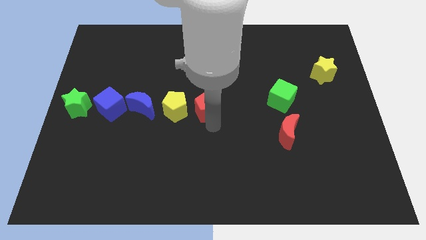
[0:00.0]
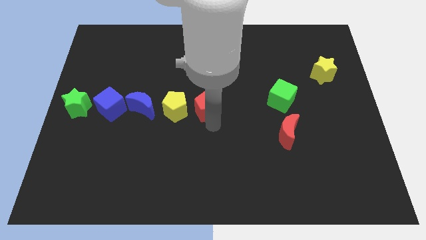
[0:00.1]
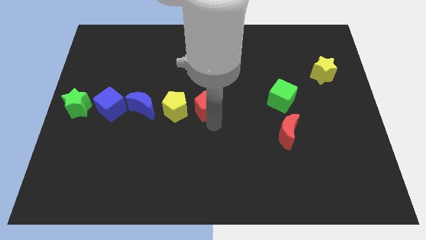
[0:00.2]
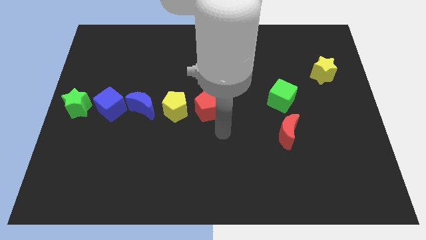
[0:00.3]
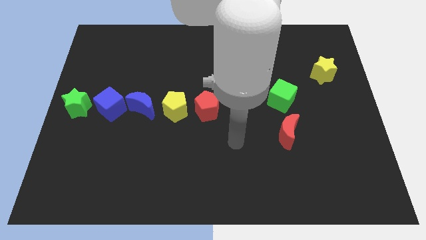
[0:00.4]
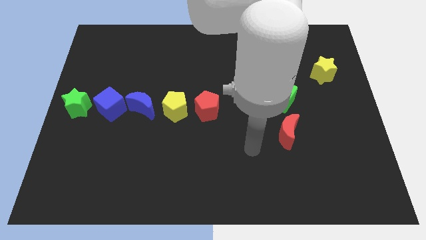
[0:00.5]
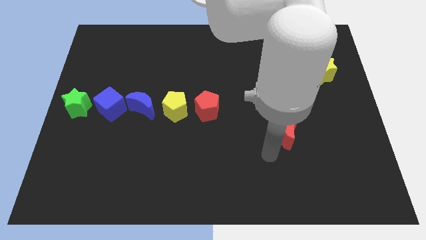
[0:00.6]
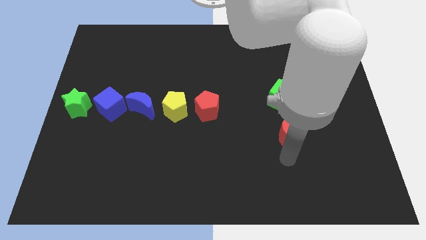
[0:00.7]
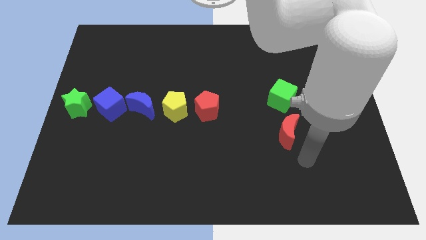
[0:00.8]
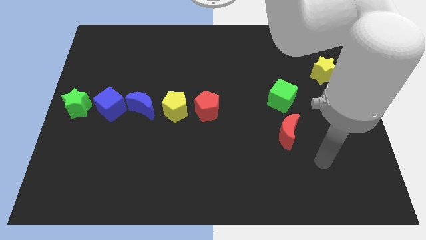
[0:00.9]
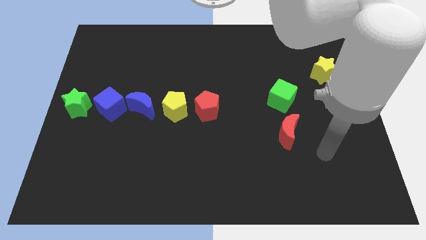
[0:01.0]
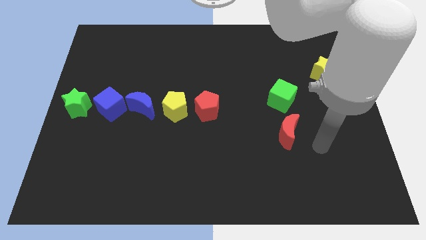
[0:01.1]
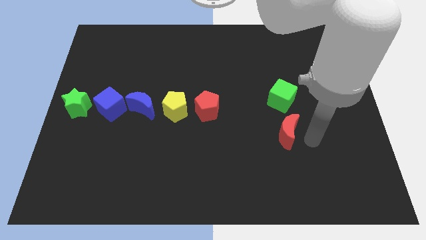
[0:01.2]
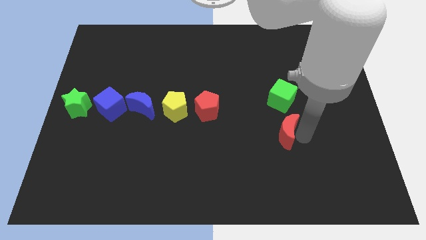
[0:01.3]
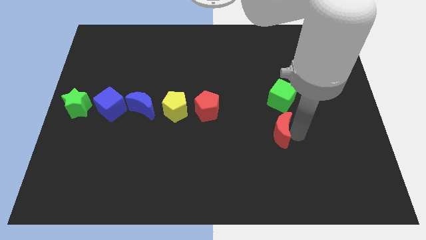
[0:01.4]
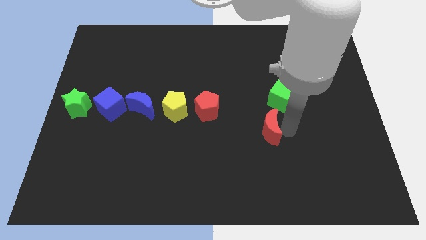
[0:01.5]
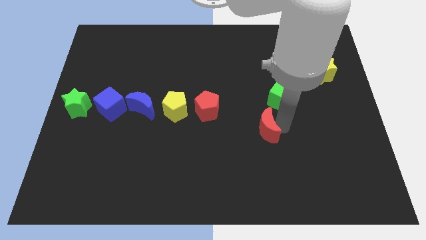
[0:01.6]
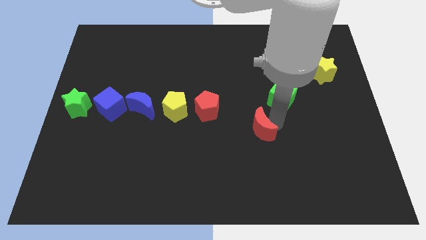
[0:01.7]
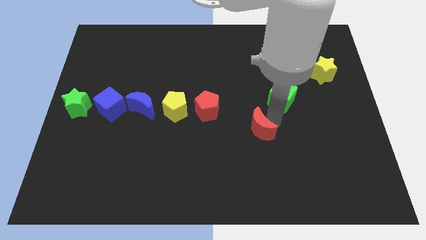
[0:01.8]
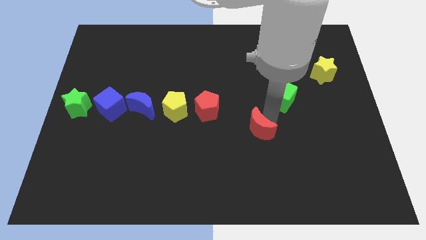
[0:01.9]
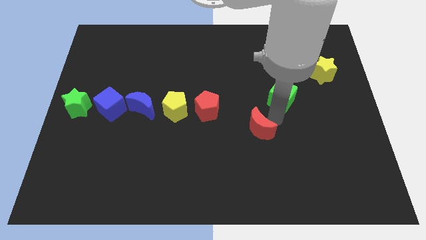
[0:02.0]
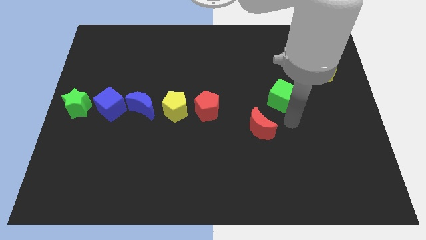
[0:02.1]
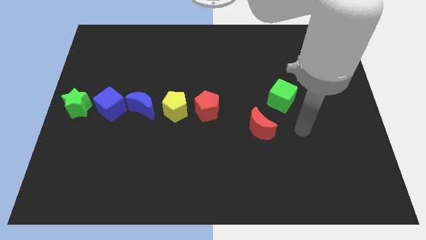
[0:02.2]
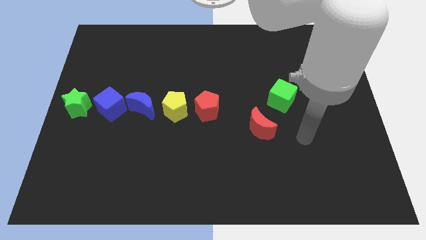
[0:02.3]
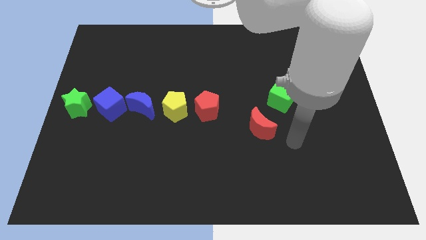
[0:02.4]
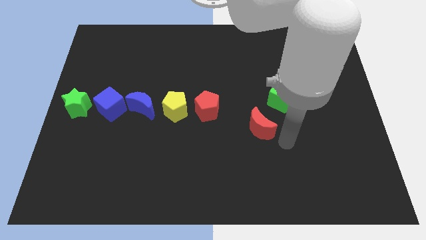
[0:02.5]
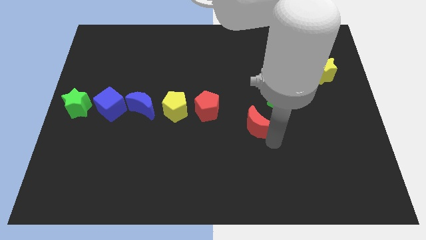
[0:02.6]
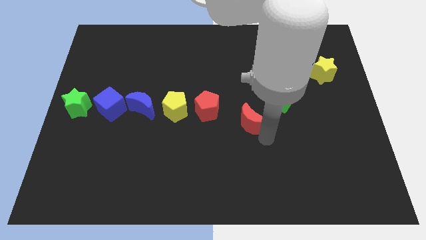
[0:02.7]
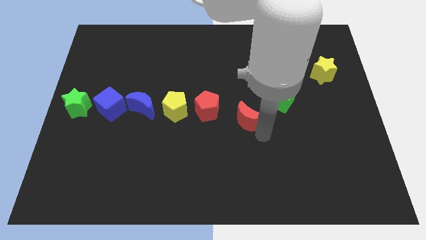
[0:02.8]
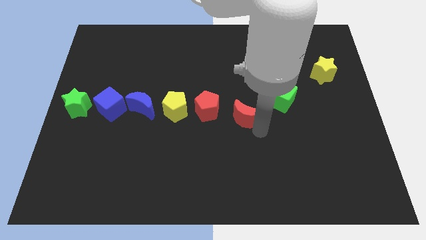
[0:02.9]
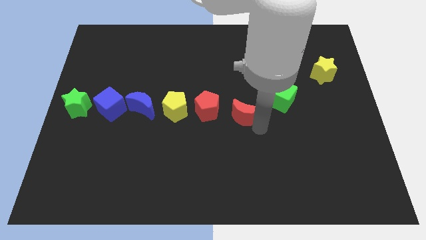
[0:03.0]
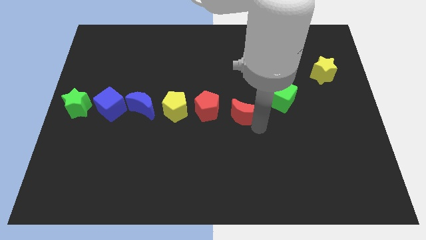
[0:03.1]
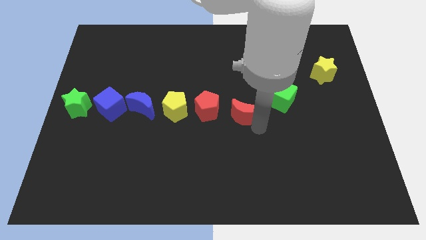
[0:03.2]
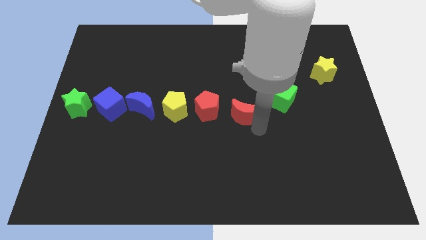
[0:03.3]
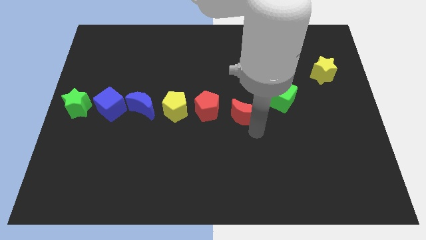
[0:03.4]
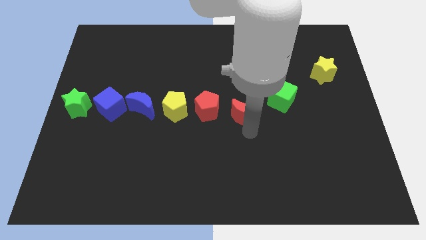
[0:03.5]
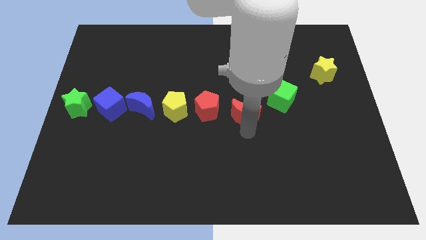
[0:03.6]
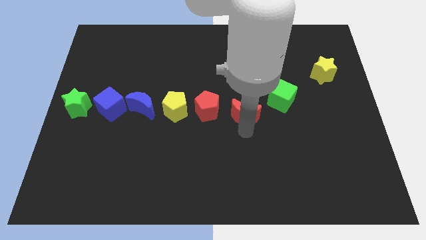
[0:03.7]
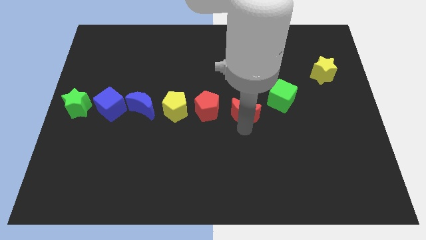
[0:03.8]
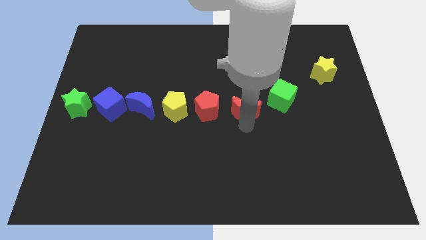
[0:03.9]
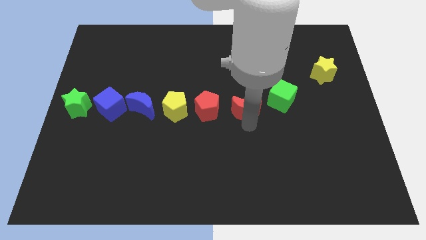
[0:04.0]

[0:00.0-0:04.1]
place the red moon beside the red pentagon

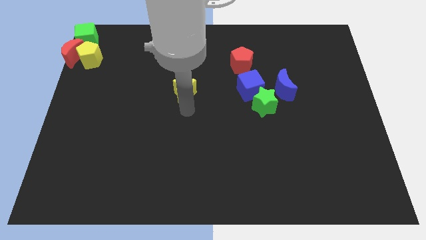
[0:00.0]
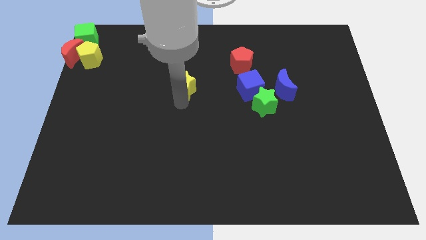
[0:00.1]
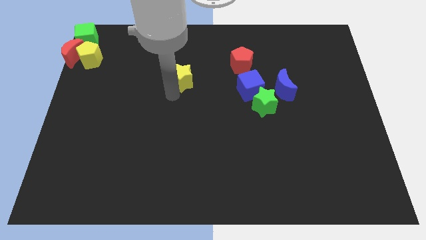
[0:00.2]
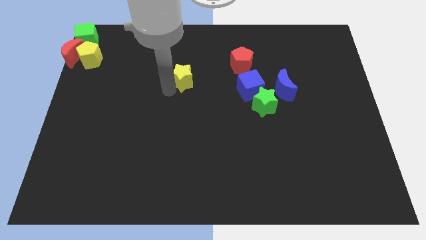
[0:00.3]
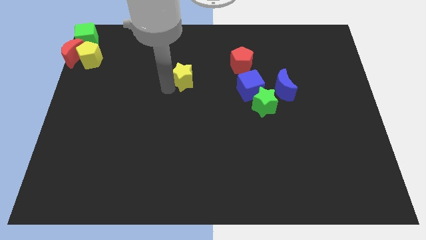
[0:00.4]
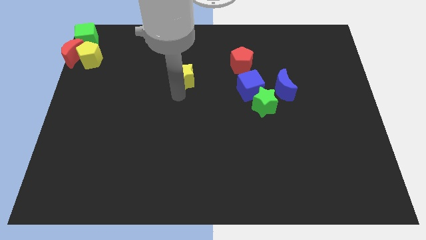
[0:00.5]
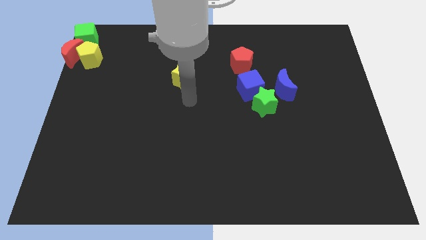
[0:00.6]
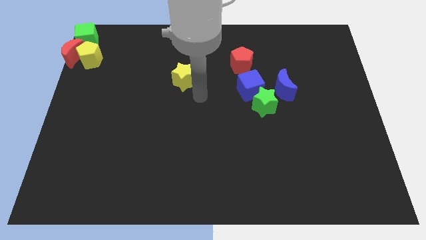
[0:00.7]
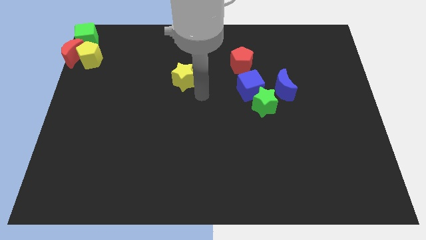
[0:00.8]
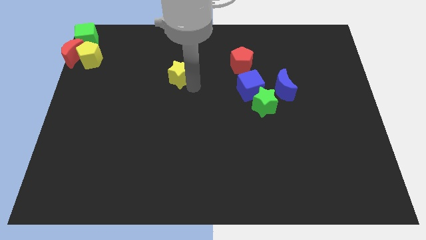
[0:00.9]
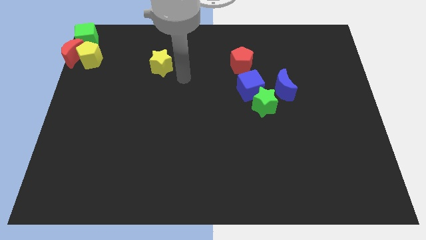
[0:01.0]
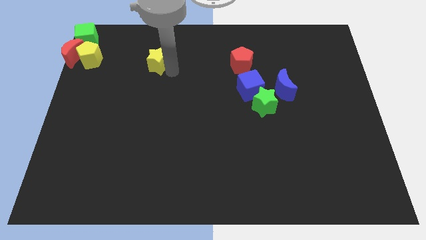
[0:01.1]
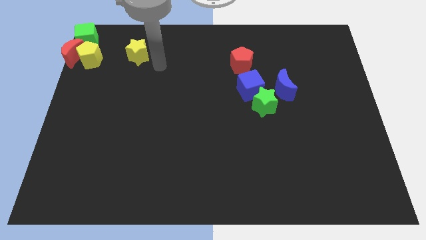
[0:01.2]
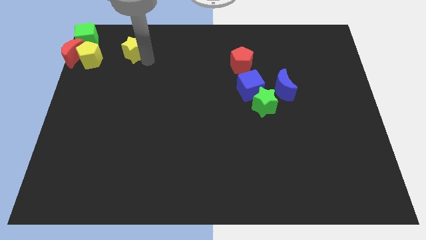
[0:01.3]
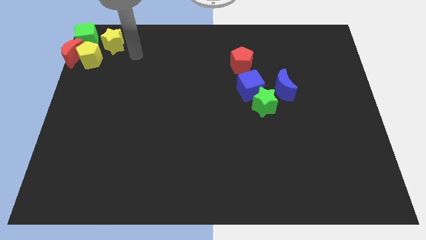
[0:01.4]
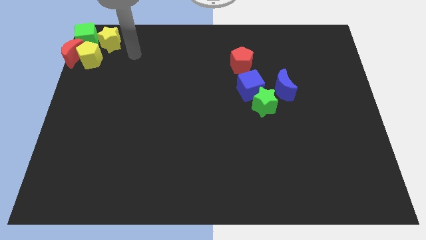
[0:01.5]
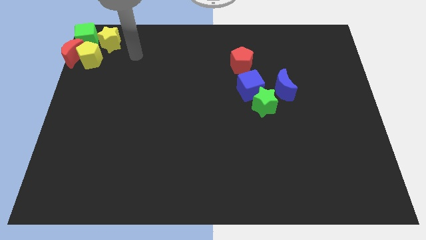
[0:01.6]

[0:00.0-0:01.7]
place the yellow pentagon to the top left corner of the board

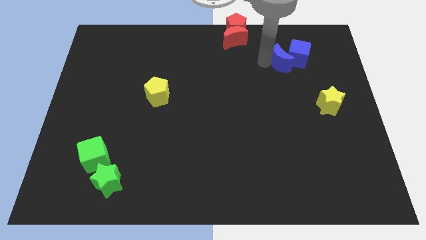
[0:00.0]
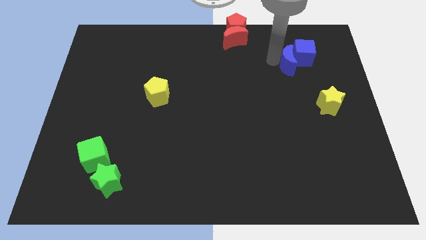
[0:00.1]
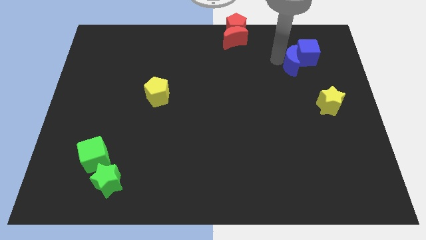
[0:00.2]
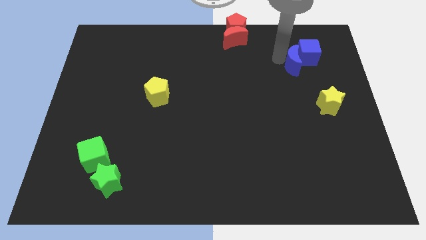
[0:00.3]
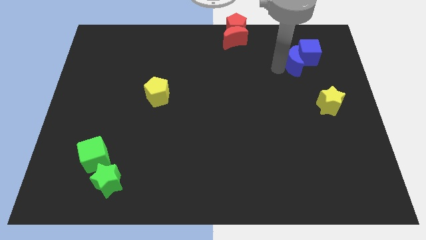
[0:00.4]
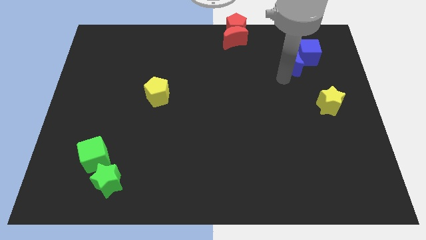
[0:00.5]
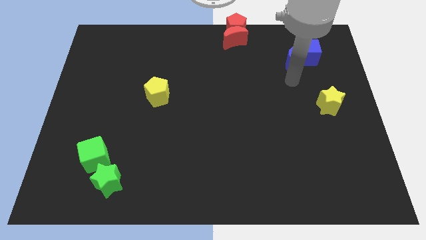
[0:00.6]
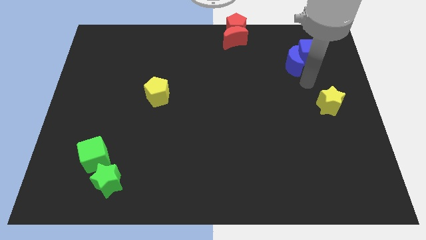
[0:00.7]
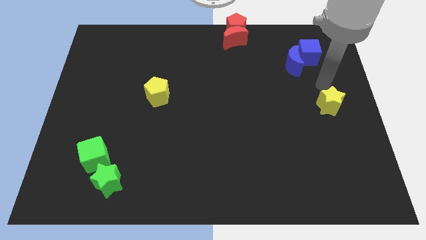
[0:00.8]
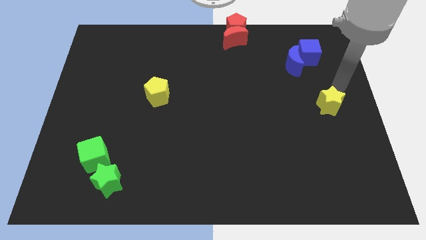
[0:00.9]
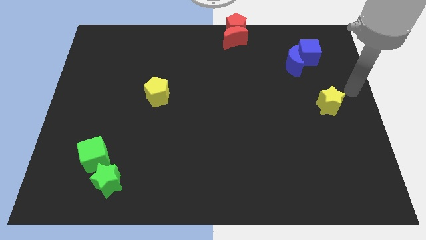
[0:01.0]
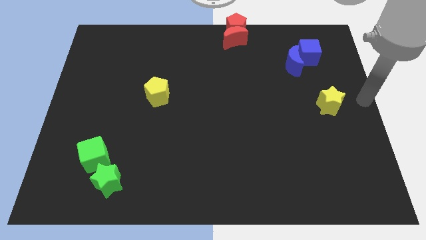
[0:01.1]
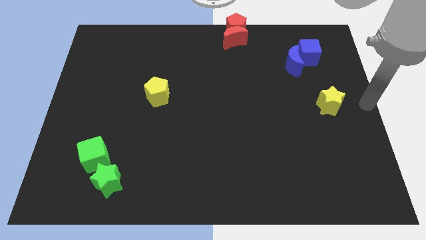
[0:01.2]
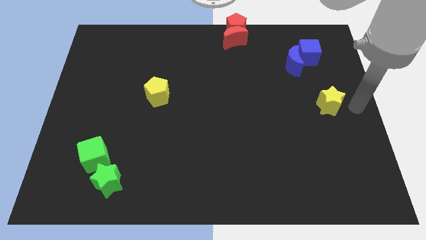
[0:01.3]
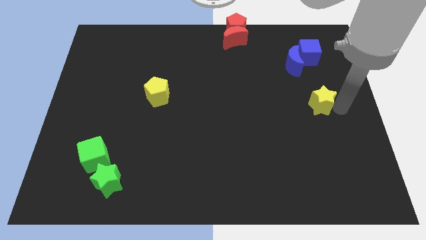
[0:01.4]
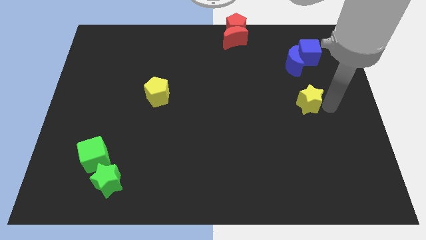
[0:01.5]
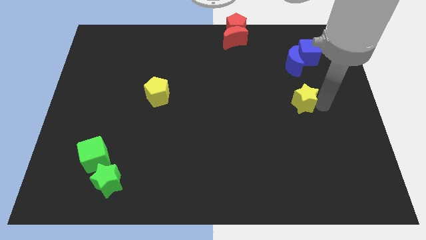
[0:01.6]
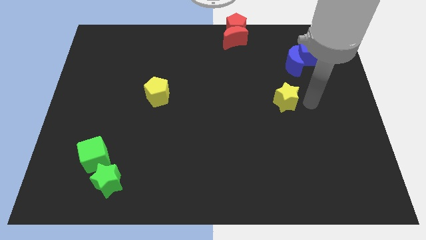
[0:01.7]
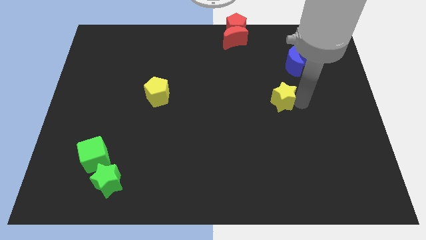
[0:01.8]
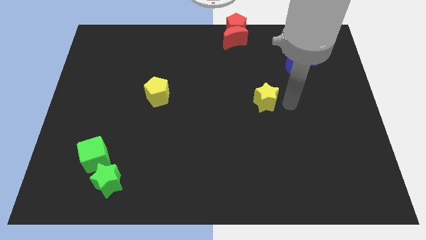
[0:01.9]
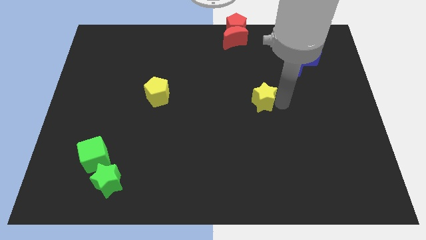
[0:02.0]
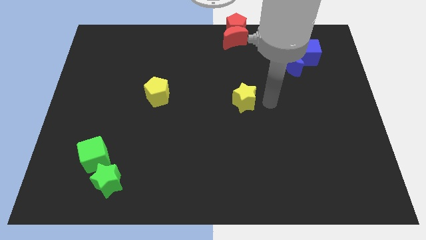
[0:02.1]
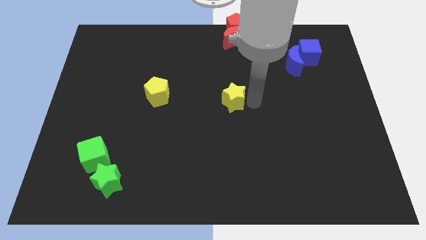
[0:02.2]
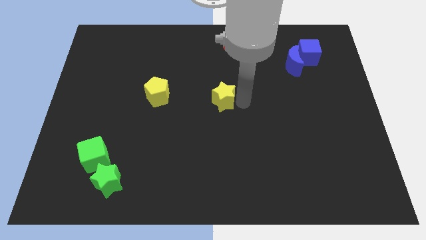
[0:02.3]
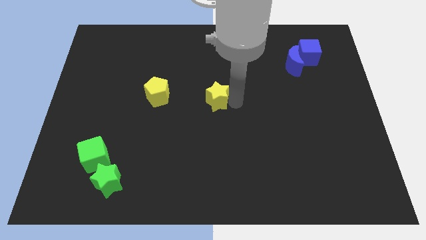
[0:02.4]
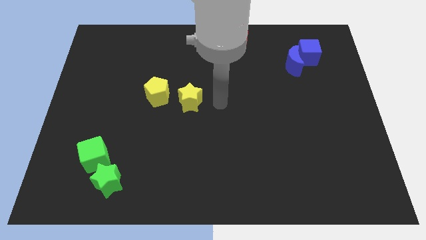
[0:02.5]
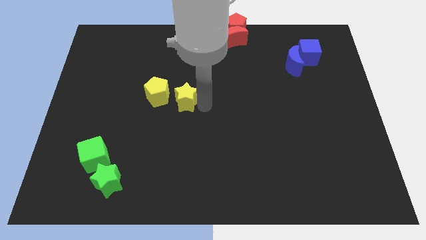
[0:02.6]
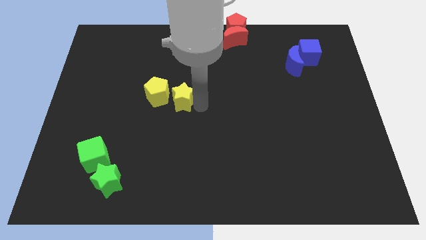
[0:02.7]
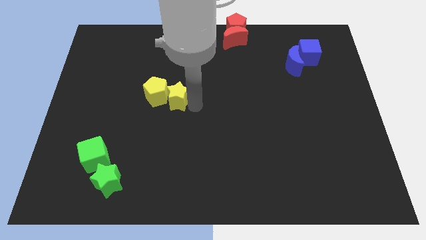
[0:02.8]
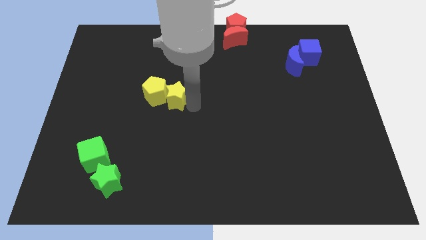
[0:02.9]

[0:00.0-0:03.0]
place the yellow star into the yellow pentagon

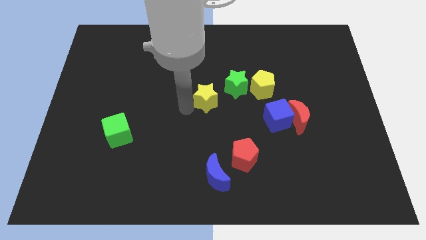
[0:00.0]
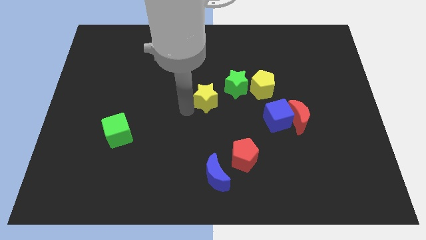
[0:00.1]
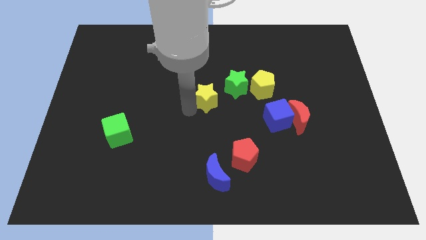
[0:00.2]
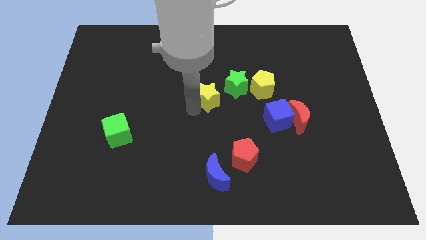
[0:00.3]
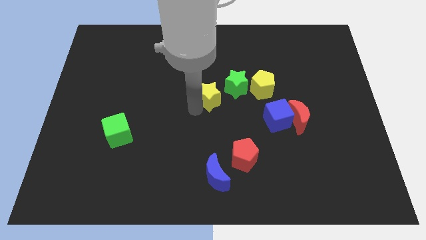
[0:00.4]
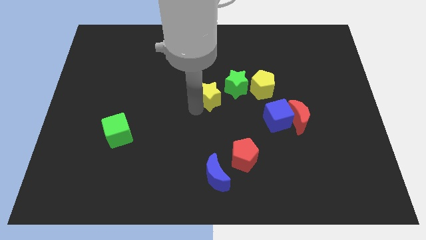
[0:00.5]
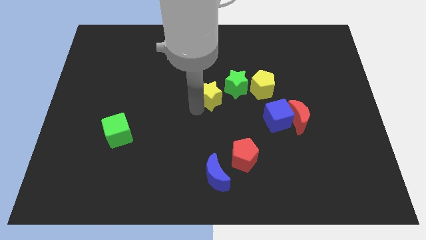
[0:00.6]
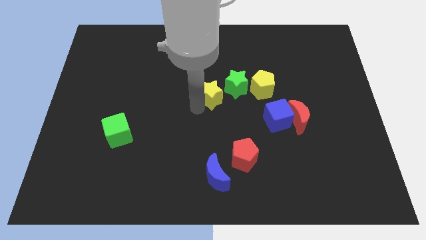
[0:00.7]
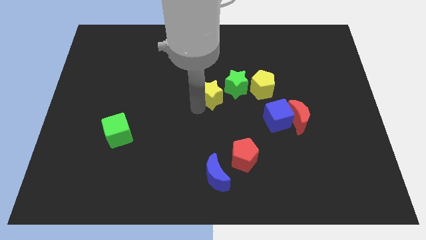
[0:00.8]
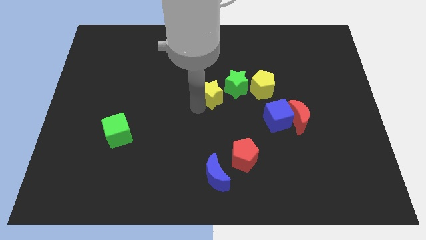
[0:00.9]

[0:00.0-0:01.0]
push the yellow star towards the bottom left side of the green star
